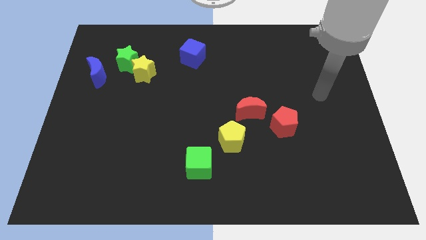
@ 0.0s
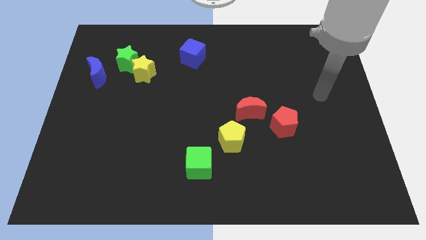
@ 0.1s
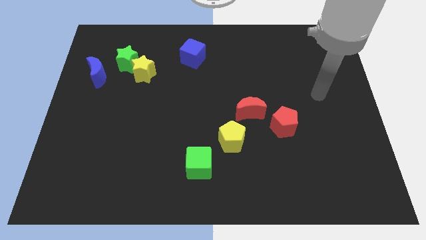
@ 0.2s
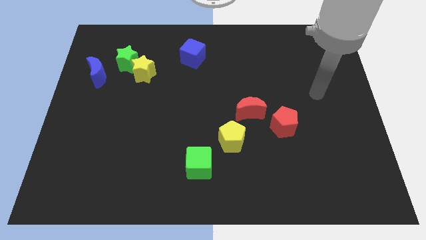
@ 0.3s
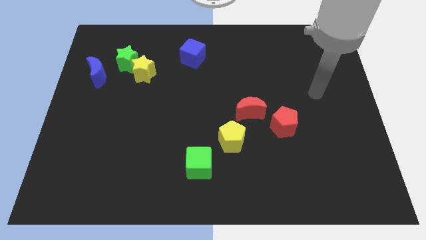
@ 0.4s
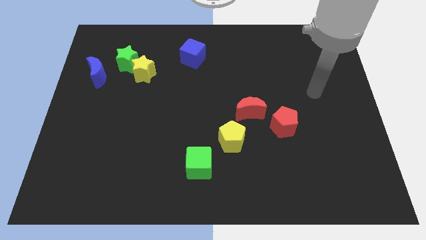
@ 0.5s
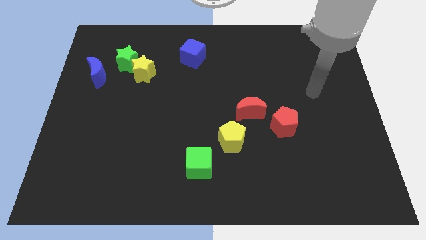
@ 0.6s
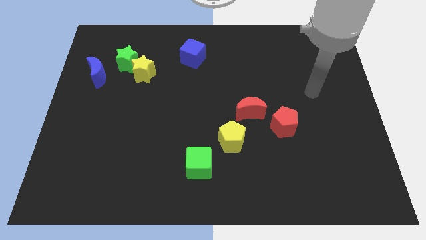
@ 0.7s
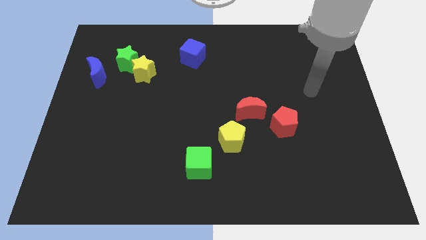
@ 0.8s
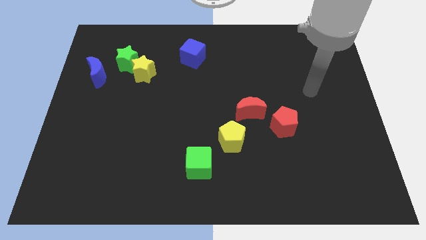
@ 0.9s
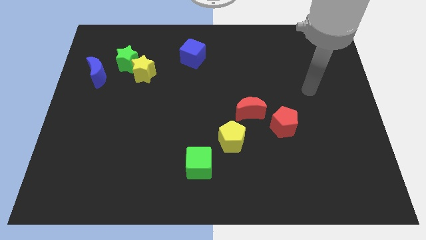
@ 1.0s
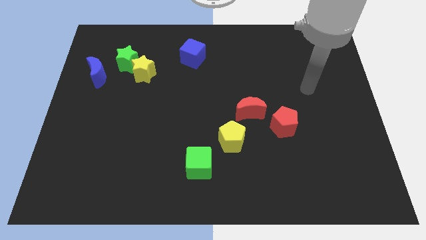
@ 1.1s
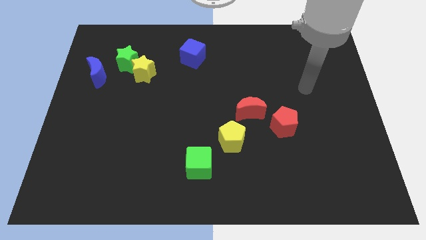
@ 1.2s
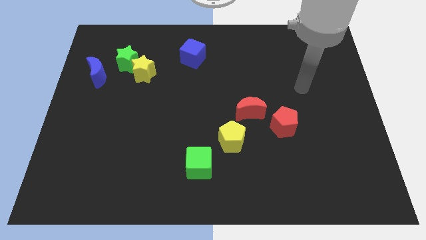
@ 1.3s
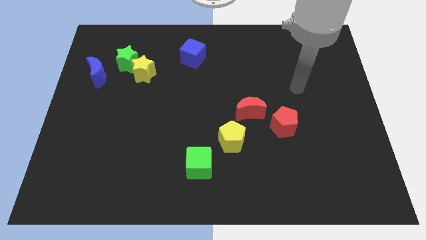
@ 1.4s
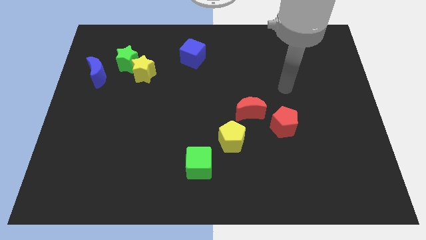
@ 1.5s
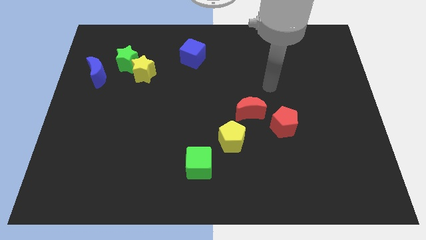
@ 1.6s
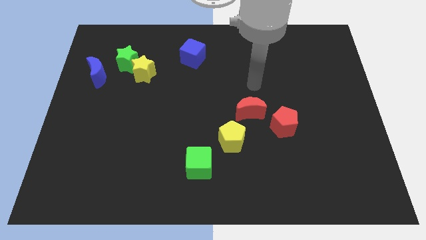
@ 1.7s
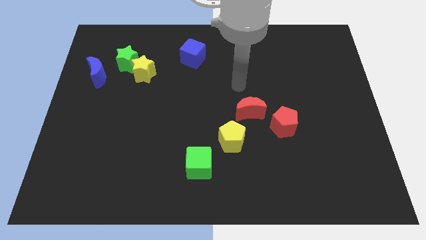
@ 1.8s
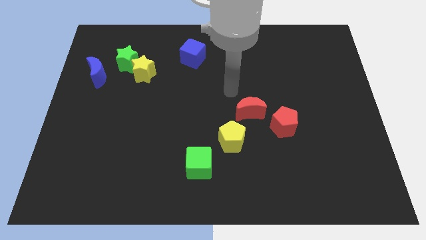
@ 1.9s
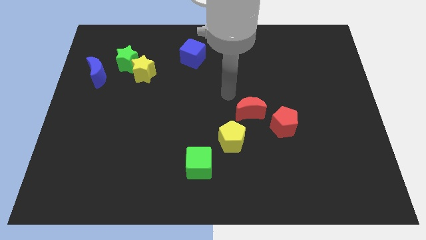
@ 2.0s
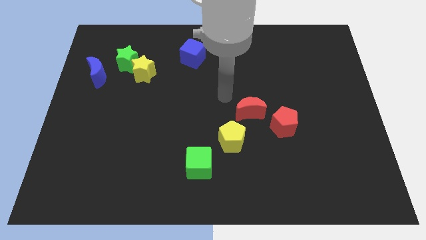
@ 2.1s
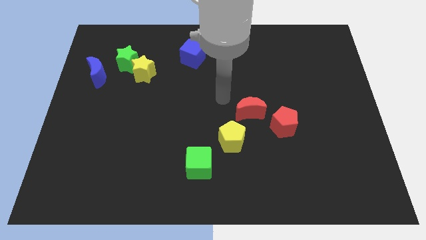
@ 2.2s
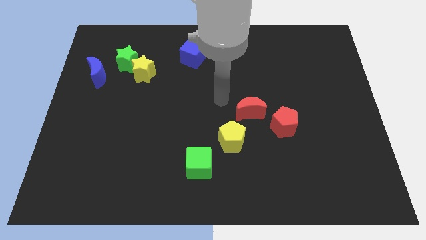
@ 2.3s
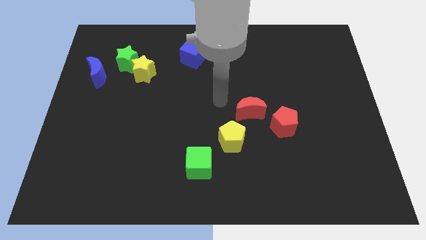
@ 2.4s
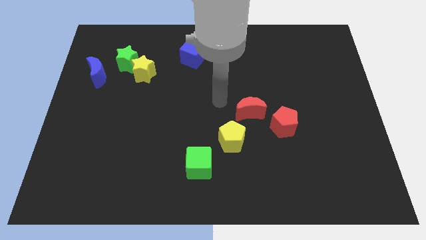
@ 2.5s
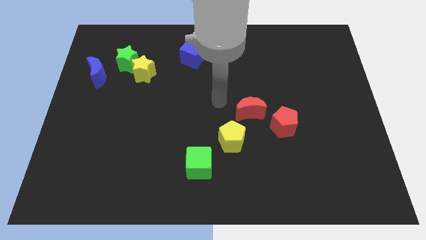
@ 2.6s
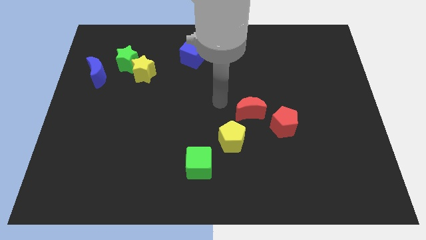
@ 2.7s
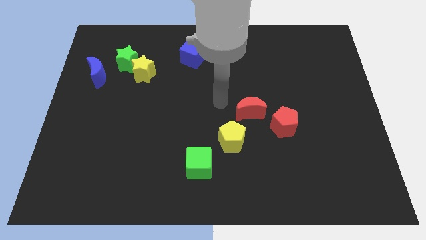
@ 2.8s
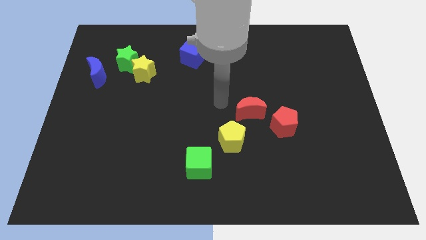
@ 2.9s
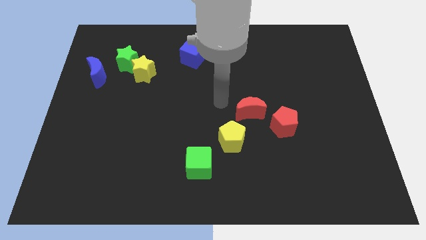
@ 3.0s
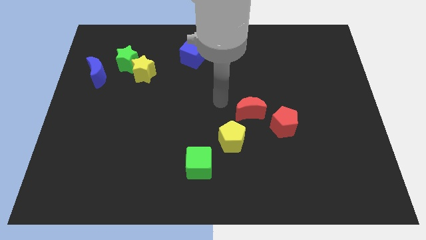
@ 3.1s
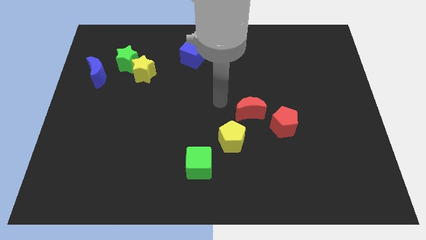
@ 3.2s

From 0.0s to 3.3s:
point your arm at the left of the red crescent

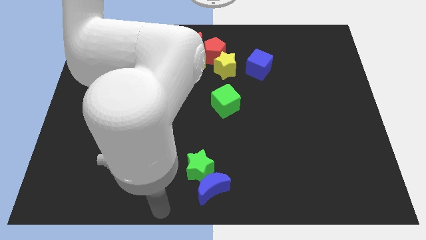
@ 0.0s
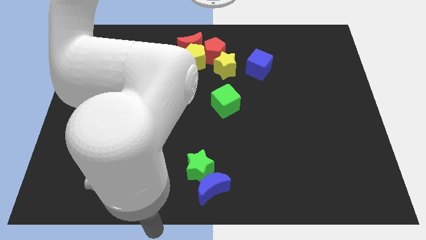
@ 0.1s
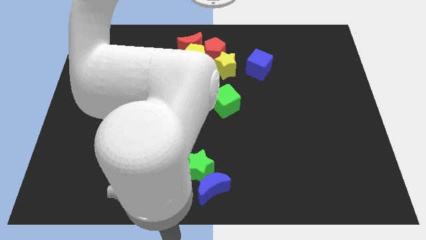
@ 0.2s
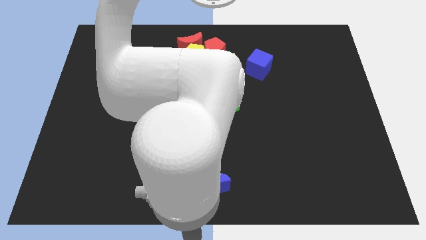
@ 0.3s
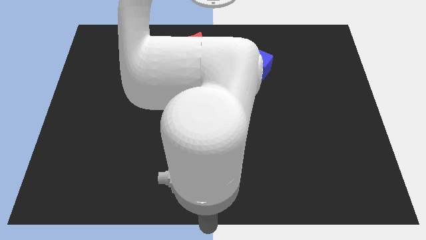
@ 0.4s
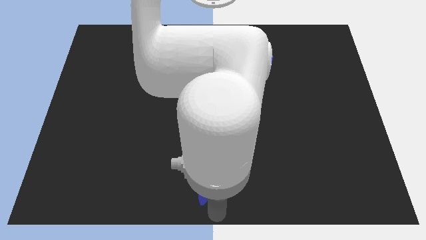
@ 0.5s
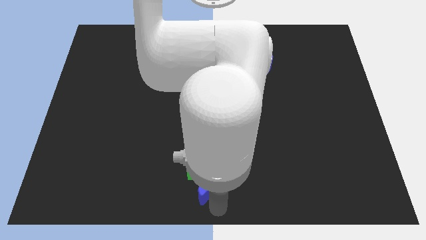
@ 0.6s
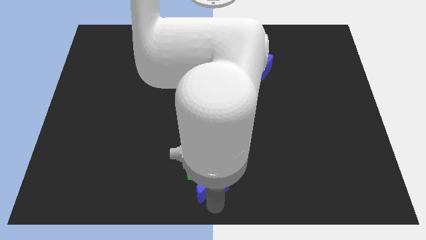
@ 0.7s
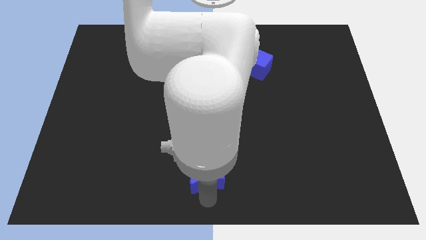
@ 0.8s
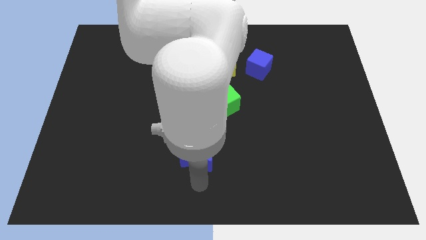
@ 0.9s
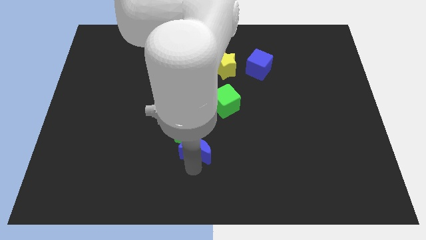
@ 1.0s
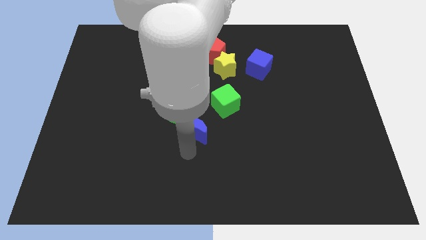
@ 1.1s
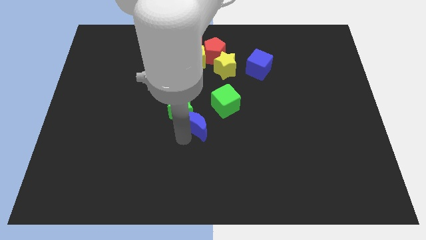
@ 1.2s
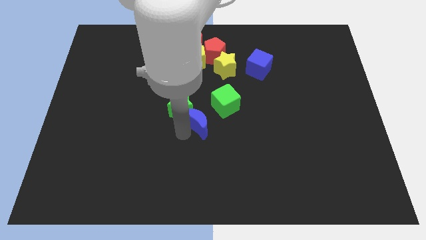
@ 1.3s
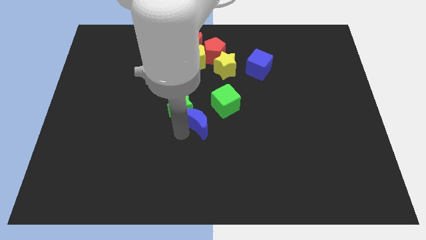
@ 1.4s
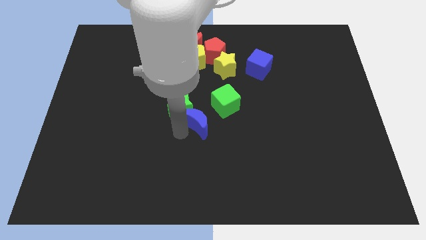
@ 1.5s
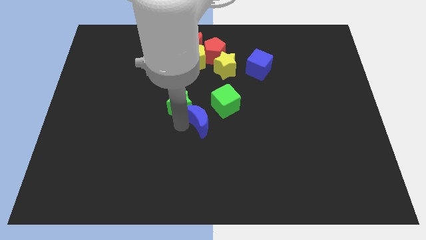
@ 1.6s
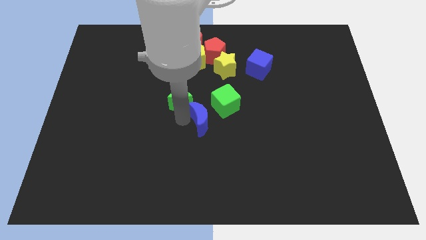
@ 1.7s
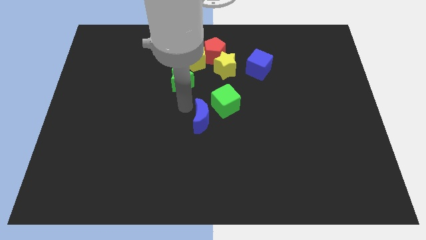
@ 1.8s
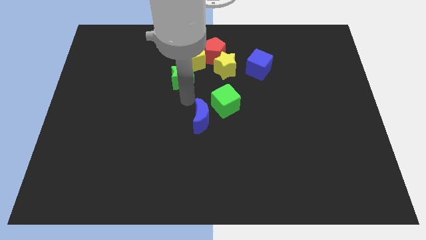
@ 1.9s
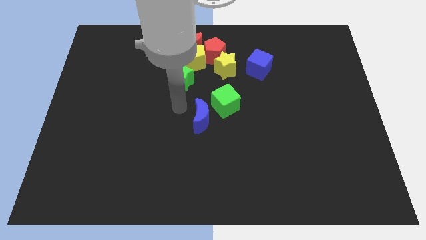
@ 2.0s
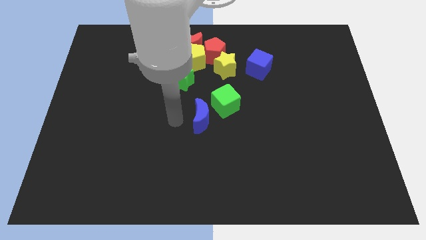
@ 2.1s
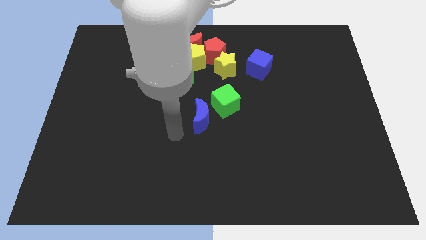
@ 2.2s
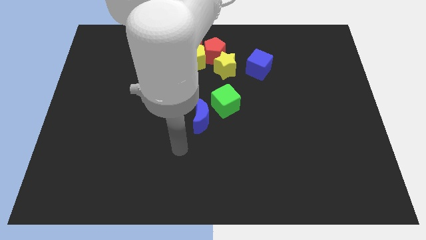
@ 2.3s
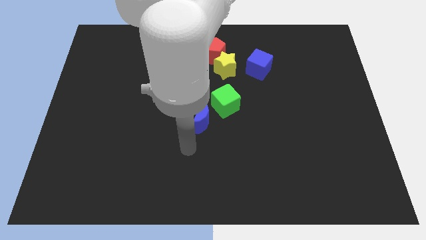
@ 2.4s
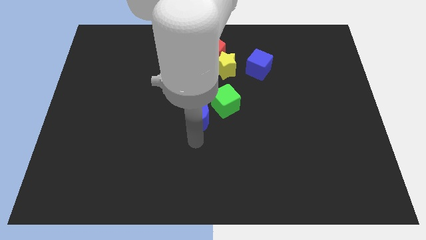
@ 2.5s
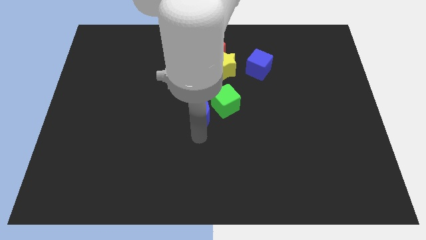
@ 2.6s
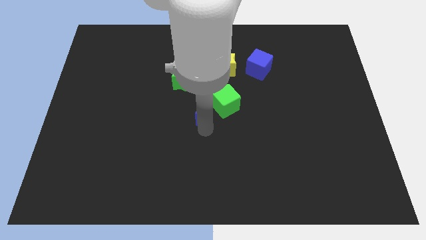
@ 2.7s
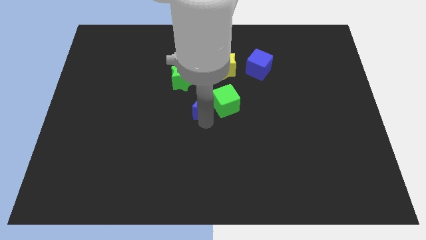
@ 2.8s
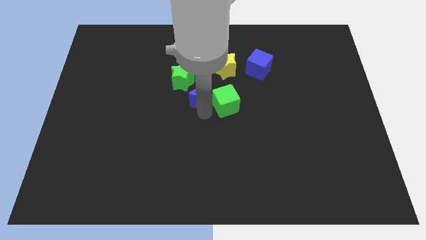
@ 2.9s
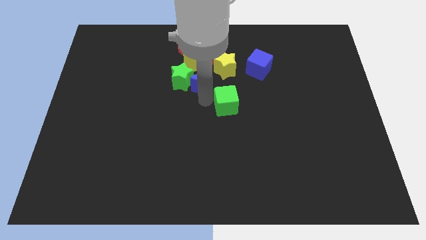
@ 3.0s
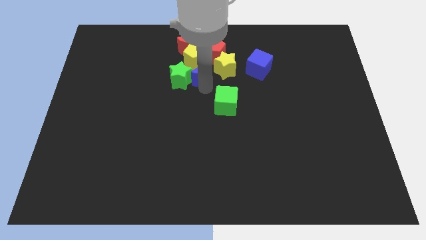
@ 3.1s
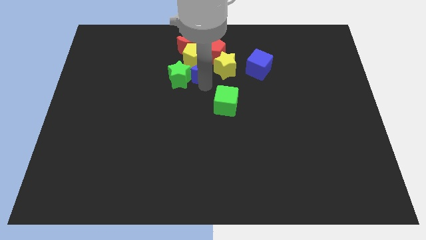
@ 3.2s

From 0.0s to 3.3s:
take the green star and blue moon into the yellow pentagon

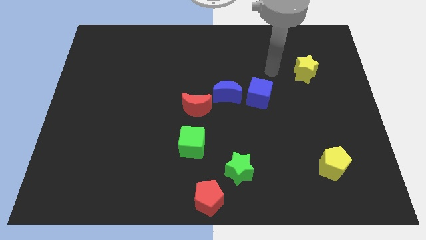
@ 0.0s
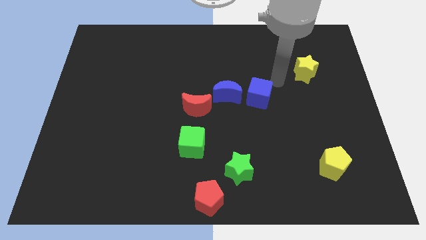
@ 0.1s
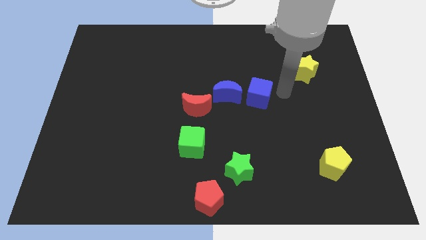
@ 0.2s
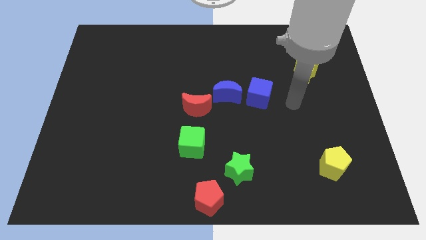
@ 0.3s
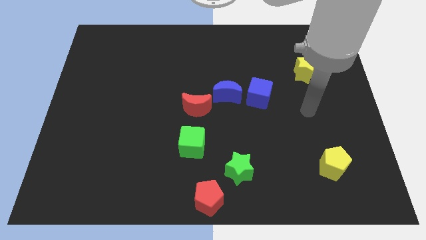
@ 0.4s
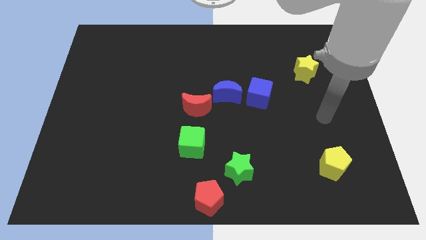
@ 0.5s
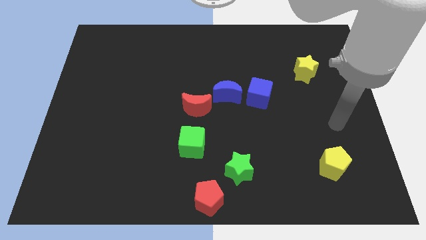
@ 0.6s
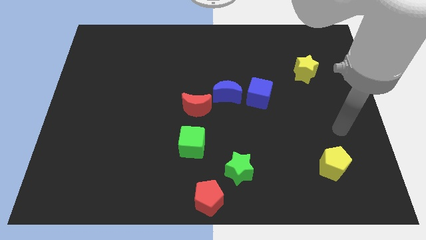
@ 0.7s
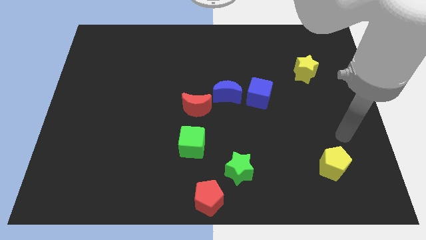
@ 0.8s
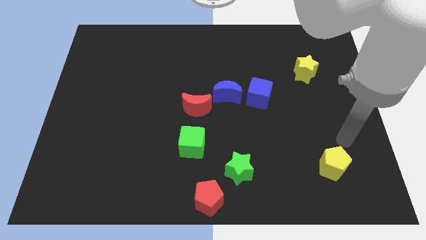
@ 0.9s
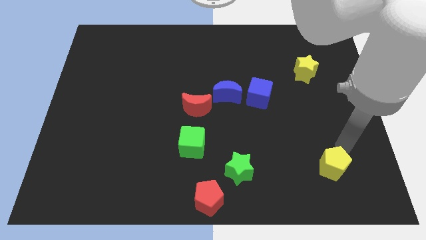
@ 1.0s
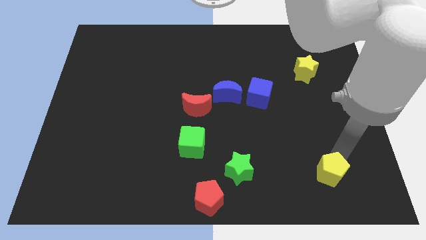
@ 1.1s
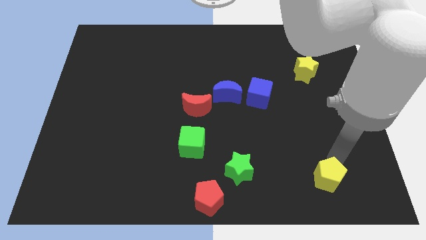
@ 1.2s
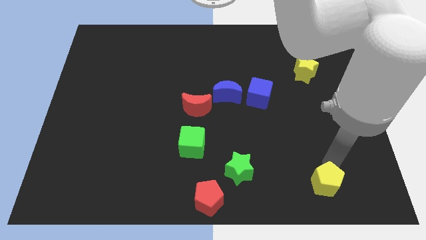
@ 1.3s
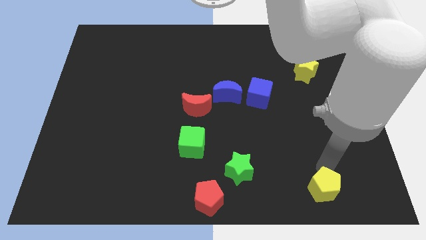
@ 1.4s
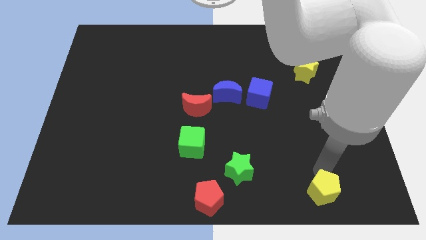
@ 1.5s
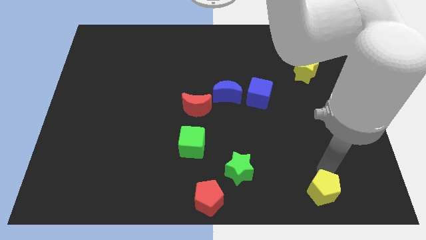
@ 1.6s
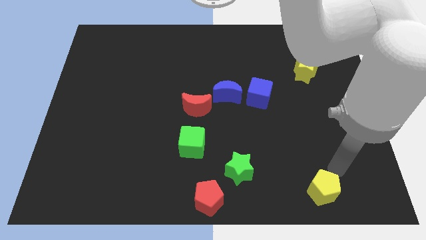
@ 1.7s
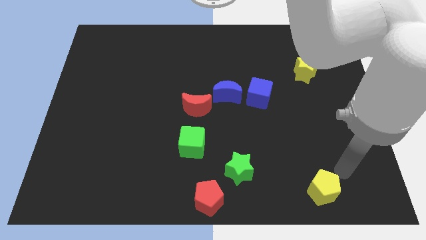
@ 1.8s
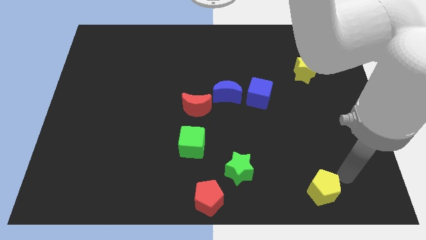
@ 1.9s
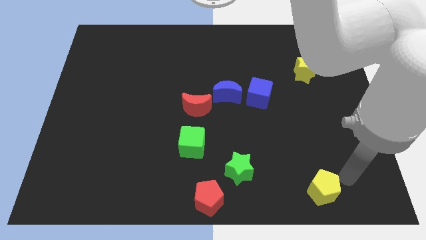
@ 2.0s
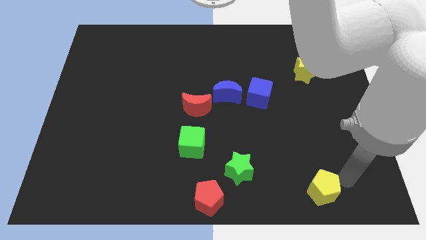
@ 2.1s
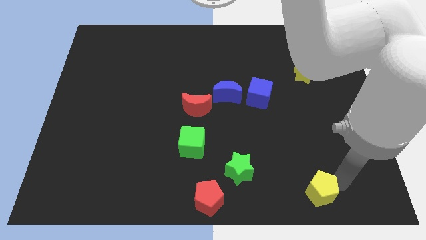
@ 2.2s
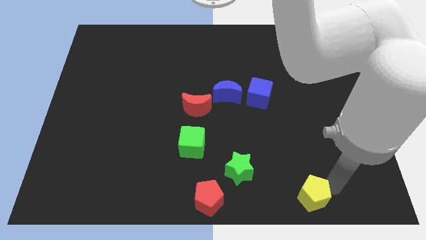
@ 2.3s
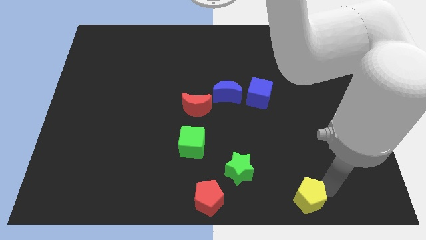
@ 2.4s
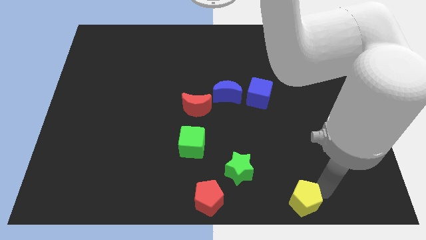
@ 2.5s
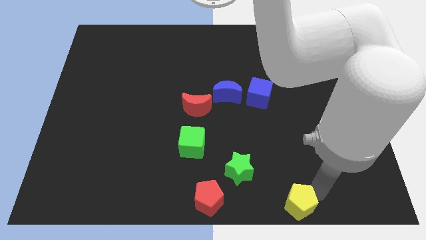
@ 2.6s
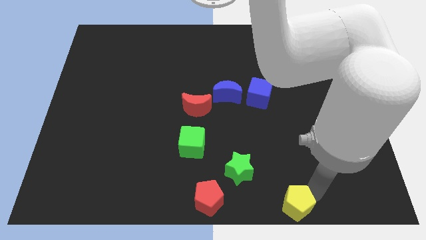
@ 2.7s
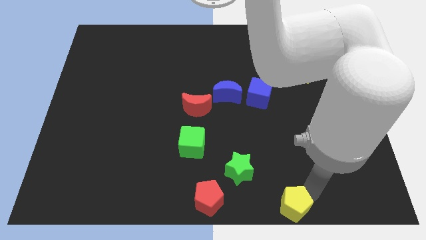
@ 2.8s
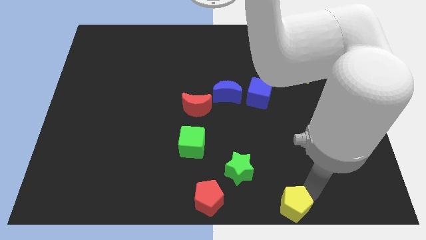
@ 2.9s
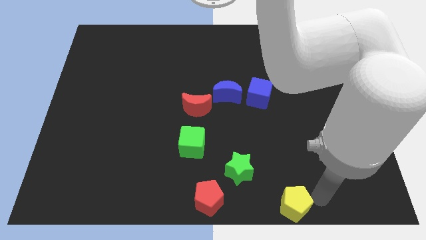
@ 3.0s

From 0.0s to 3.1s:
slide yellow pentagon down to the right of red pentagon
